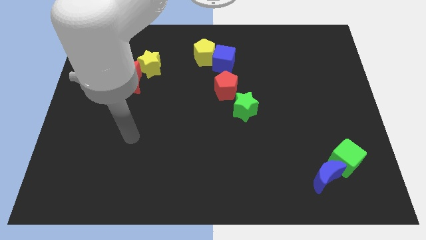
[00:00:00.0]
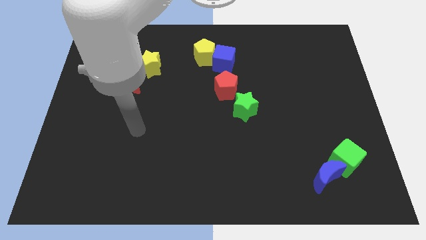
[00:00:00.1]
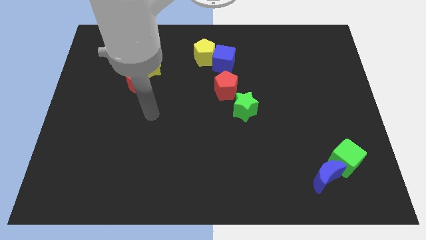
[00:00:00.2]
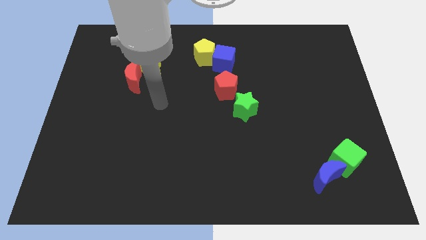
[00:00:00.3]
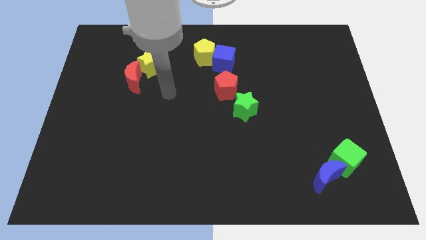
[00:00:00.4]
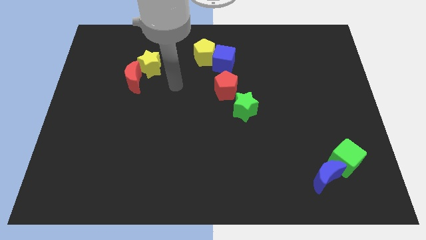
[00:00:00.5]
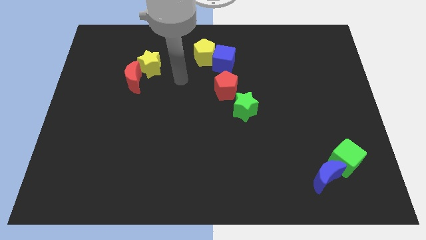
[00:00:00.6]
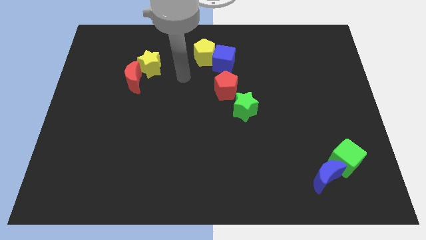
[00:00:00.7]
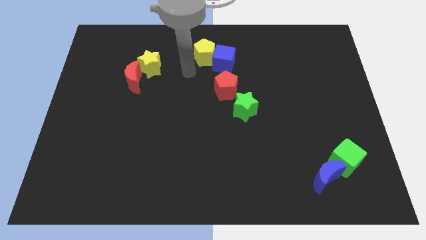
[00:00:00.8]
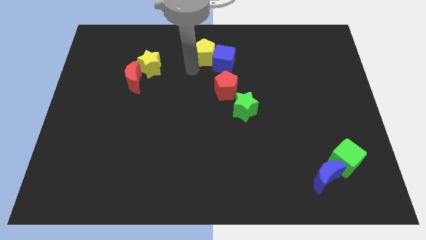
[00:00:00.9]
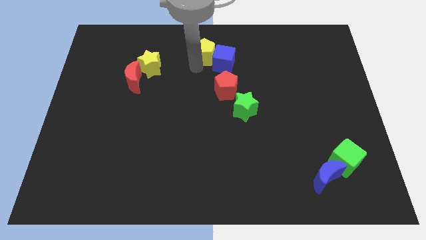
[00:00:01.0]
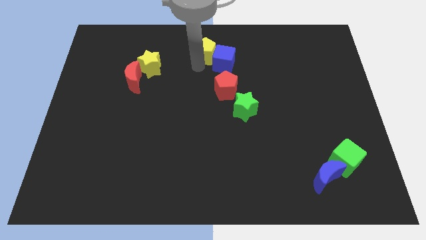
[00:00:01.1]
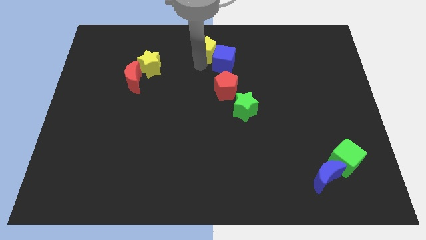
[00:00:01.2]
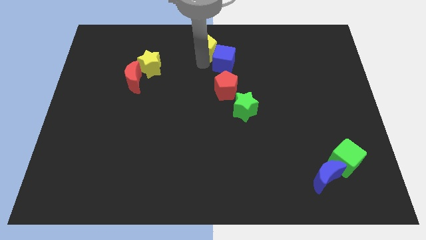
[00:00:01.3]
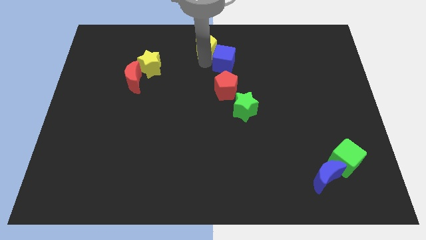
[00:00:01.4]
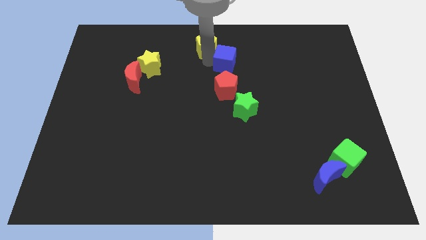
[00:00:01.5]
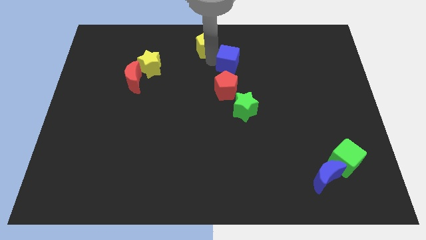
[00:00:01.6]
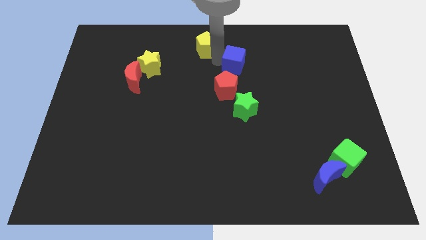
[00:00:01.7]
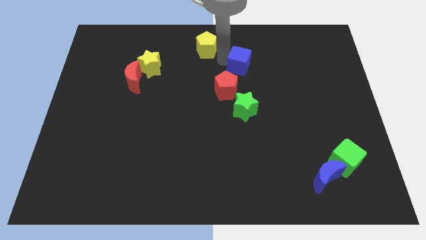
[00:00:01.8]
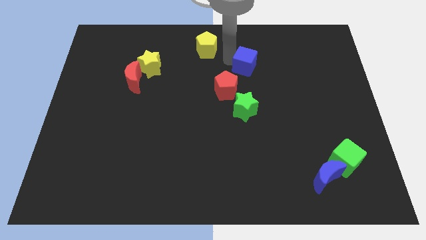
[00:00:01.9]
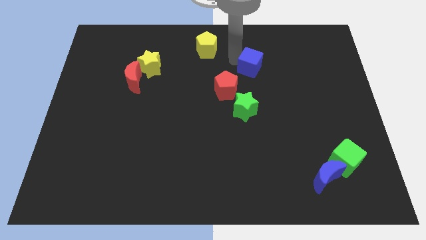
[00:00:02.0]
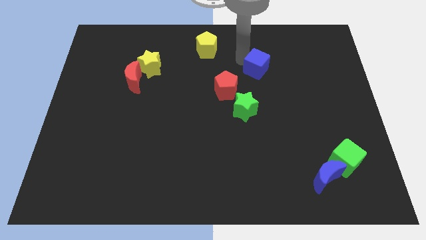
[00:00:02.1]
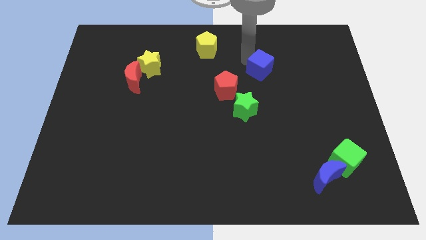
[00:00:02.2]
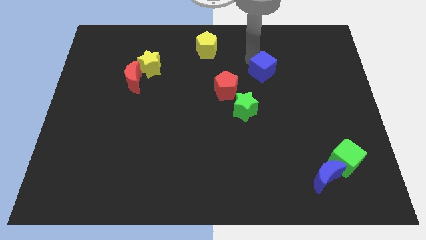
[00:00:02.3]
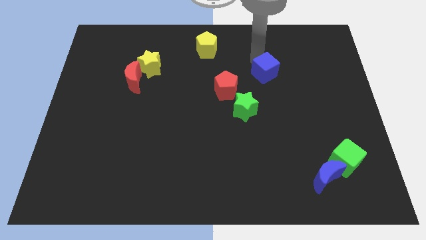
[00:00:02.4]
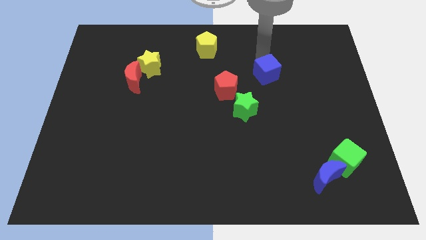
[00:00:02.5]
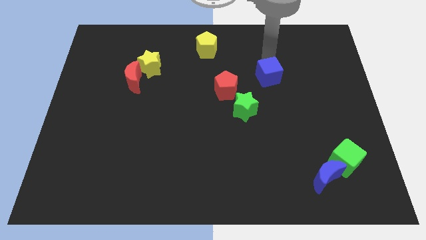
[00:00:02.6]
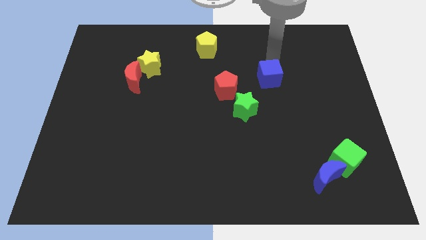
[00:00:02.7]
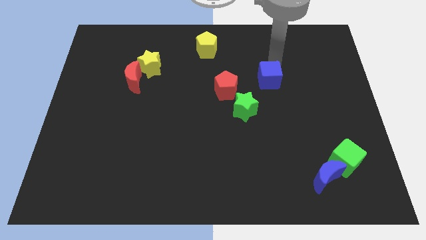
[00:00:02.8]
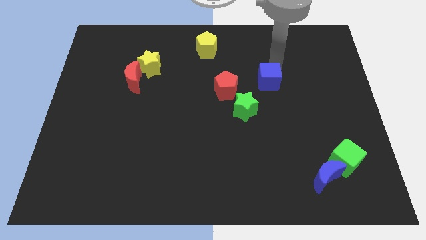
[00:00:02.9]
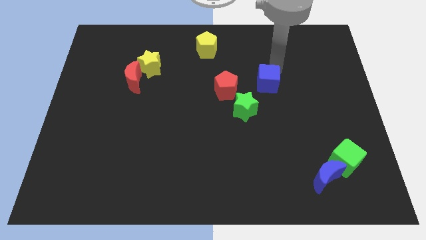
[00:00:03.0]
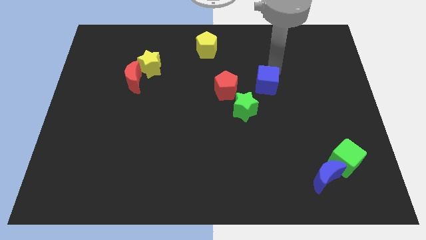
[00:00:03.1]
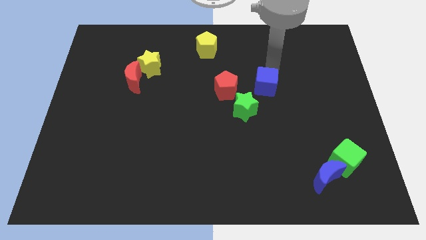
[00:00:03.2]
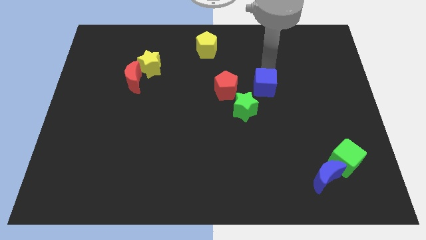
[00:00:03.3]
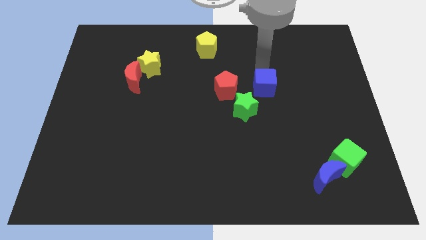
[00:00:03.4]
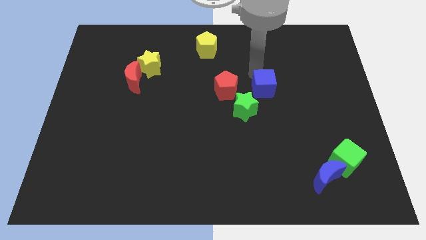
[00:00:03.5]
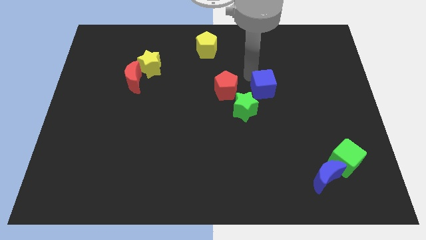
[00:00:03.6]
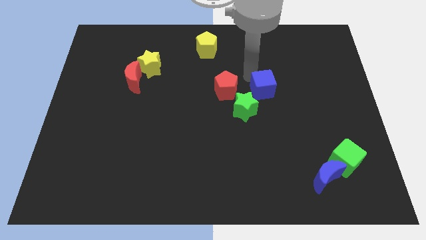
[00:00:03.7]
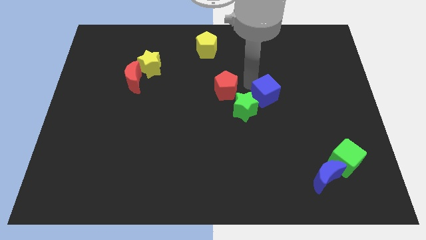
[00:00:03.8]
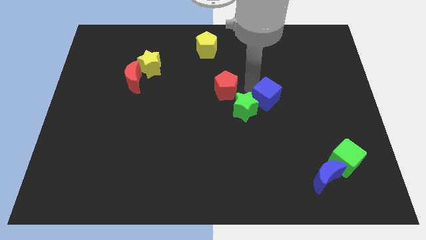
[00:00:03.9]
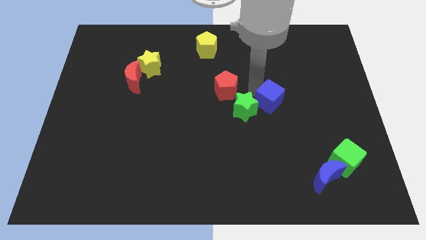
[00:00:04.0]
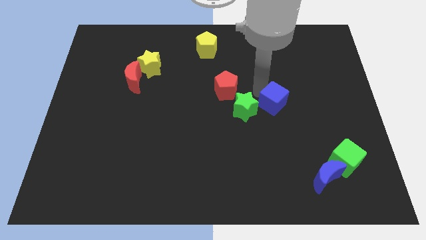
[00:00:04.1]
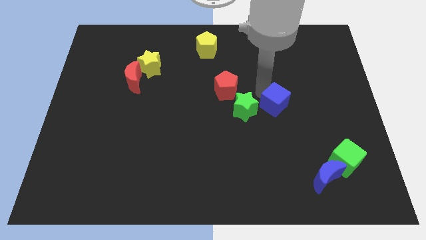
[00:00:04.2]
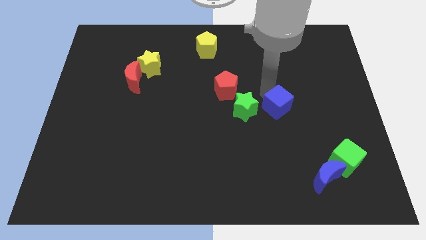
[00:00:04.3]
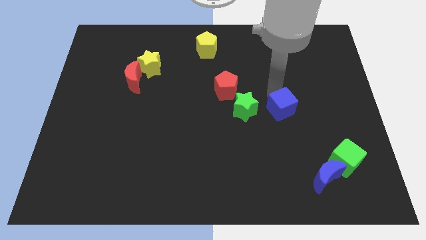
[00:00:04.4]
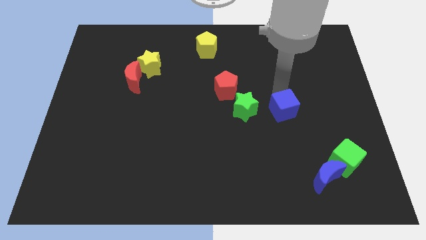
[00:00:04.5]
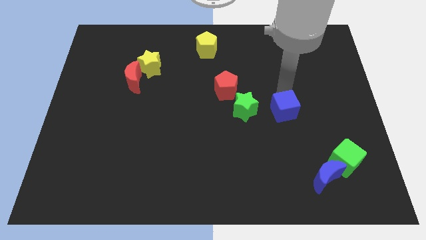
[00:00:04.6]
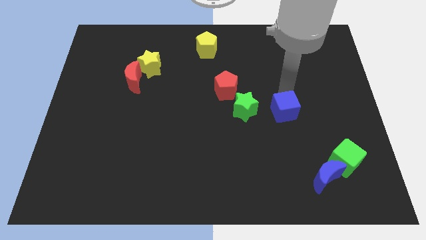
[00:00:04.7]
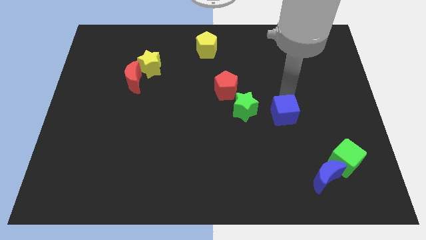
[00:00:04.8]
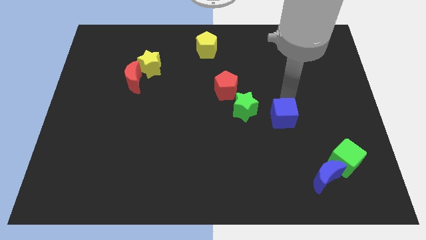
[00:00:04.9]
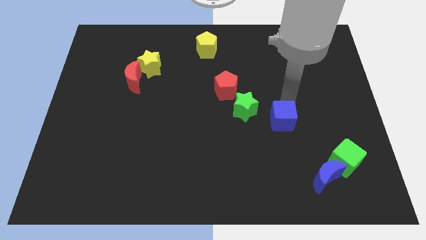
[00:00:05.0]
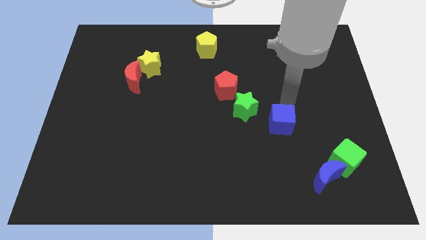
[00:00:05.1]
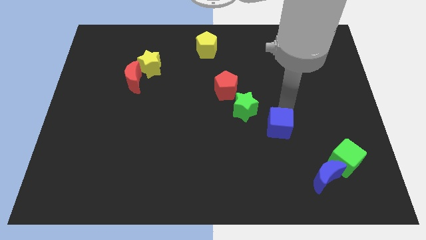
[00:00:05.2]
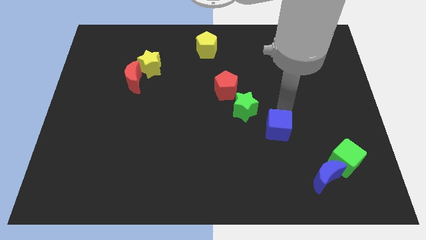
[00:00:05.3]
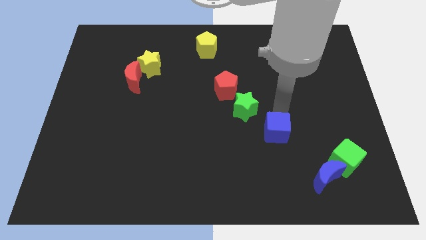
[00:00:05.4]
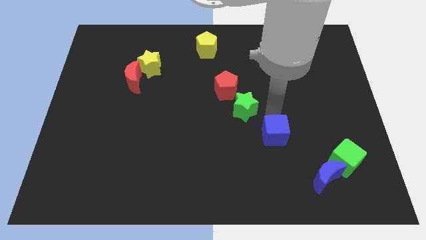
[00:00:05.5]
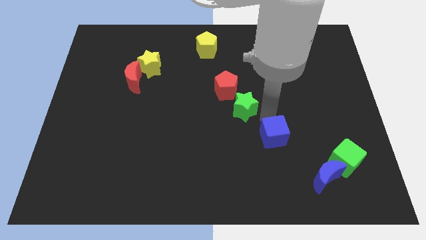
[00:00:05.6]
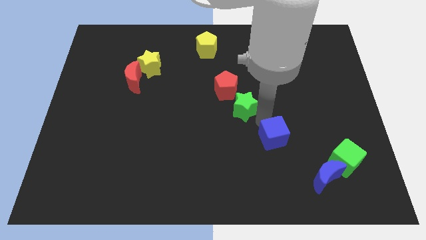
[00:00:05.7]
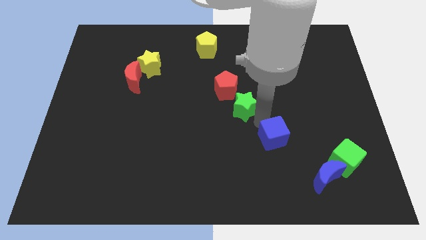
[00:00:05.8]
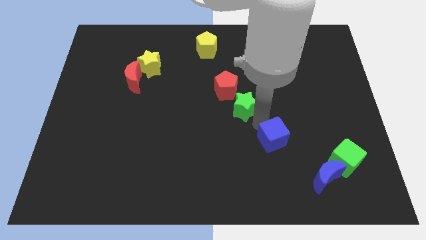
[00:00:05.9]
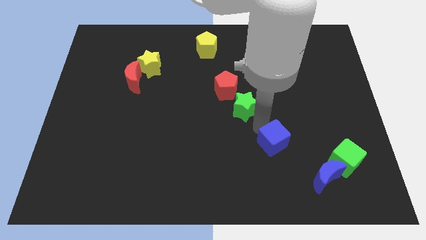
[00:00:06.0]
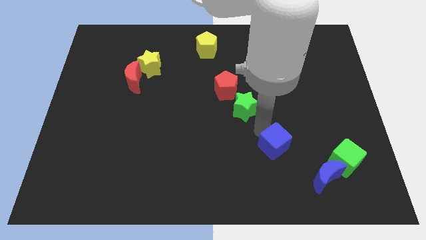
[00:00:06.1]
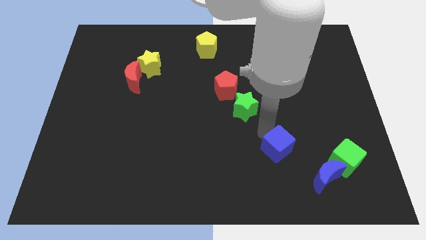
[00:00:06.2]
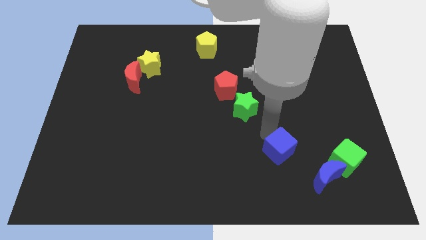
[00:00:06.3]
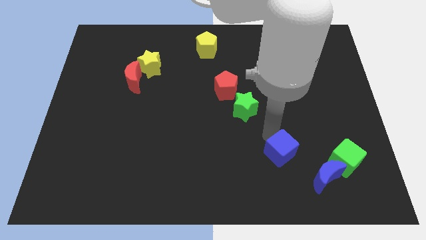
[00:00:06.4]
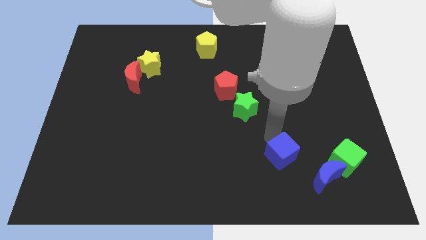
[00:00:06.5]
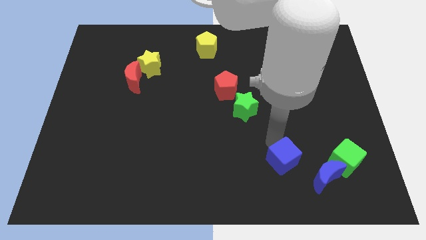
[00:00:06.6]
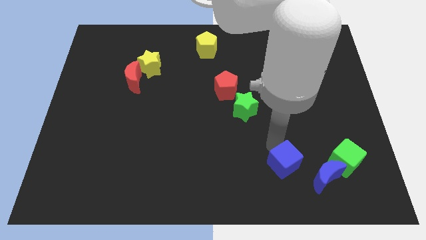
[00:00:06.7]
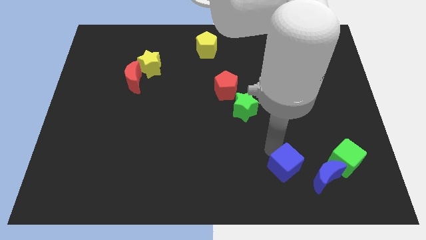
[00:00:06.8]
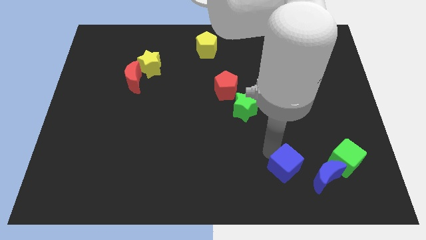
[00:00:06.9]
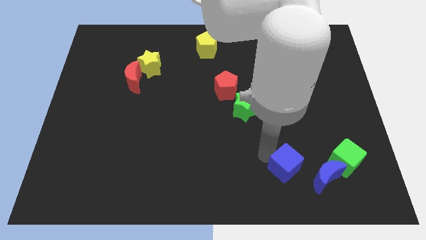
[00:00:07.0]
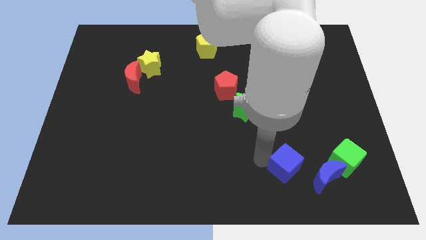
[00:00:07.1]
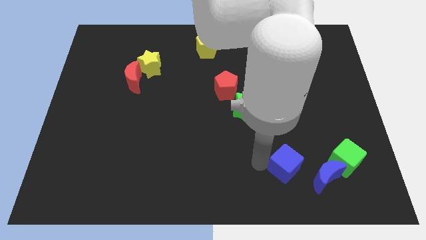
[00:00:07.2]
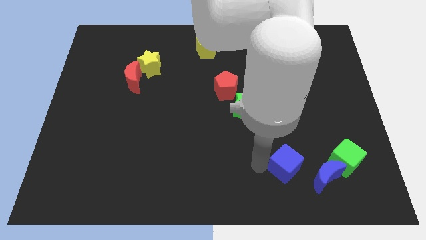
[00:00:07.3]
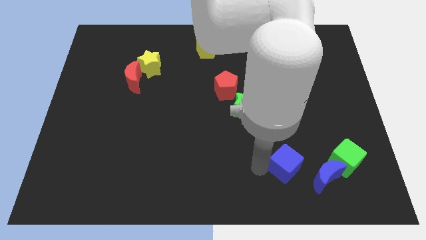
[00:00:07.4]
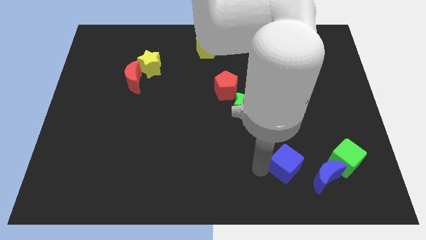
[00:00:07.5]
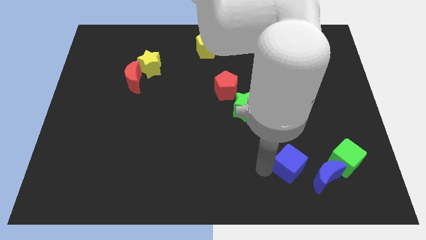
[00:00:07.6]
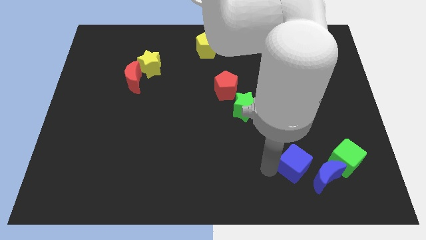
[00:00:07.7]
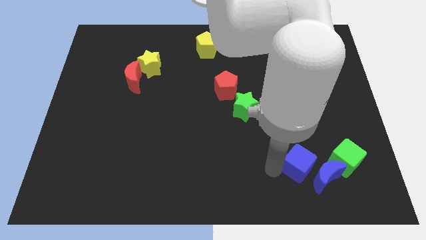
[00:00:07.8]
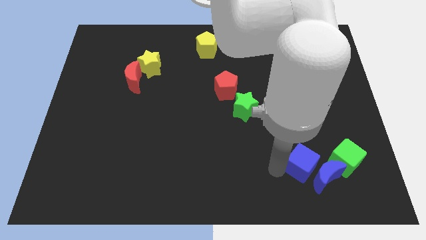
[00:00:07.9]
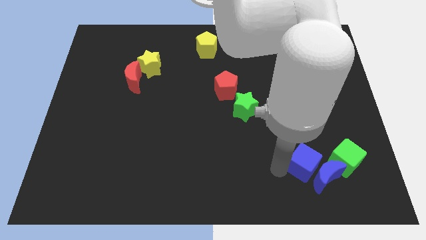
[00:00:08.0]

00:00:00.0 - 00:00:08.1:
push the blue cube next to the blue moon

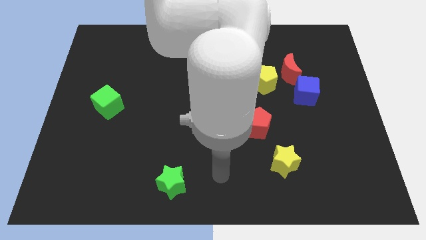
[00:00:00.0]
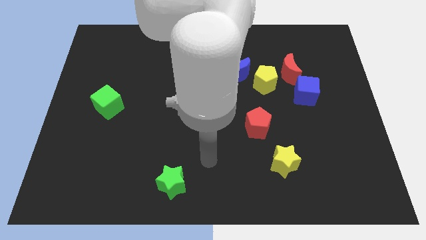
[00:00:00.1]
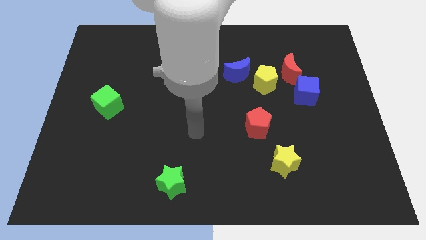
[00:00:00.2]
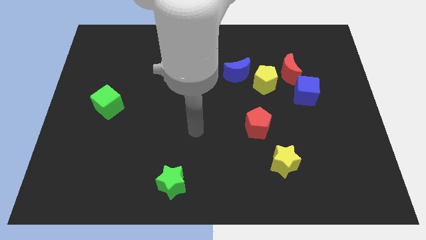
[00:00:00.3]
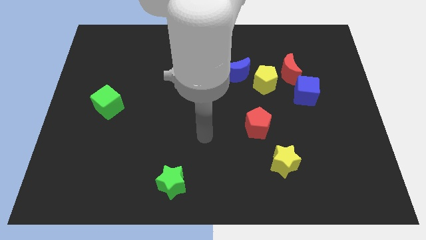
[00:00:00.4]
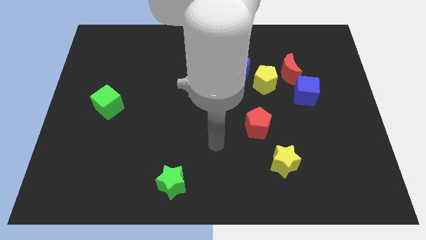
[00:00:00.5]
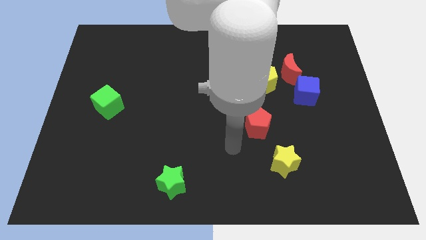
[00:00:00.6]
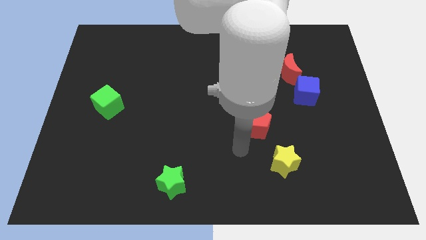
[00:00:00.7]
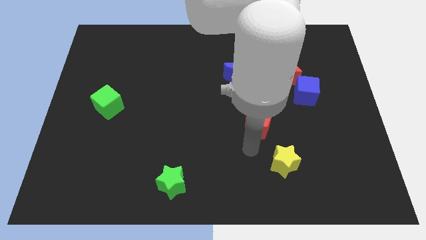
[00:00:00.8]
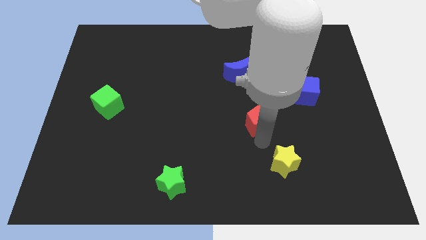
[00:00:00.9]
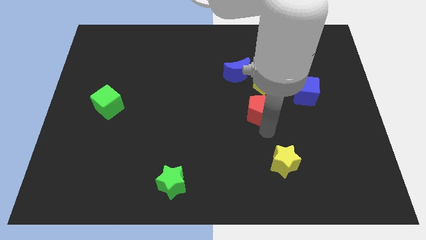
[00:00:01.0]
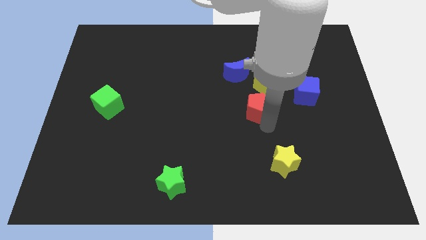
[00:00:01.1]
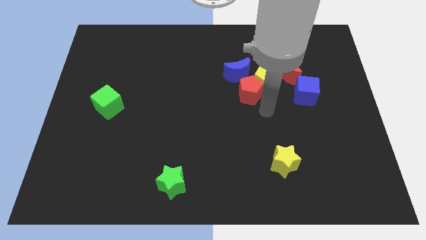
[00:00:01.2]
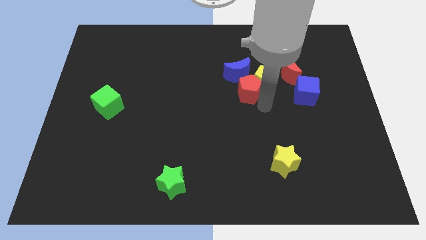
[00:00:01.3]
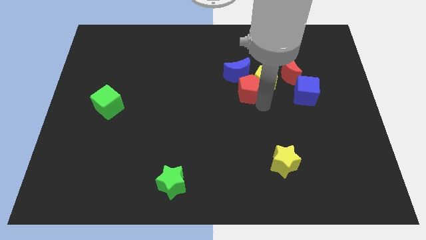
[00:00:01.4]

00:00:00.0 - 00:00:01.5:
move the red pentagon close to the yellow pentagon
